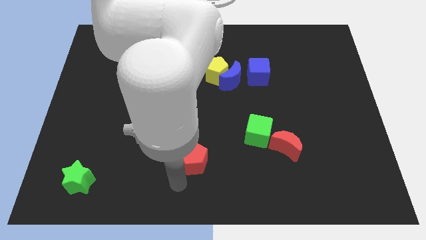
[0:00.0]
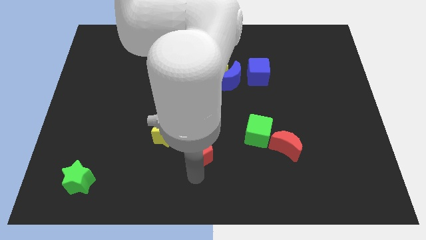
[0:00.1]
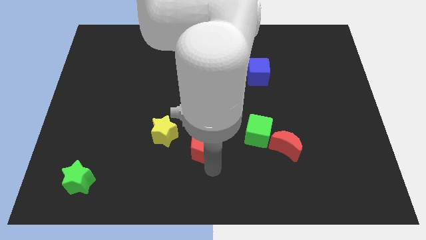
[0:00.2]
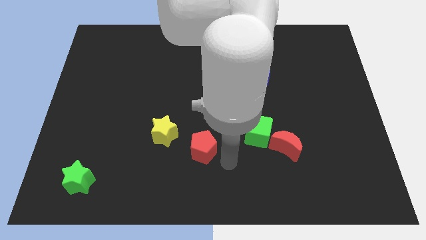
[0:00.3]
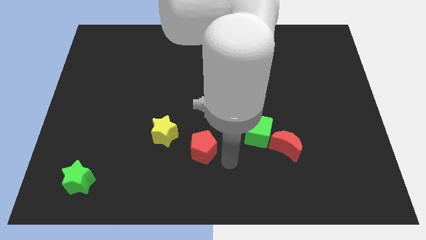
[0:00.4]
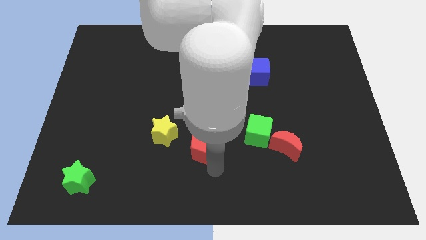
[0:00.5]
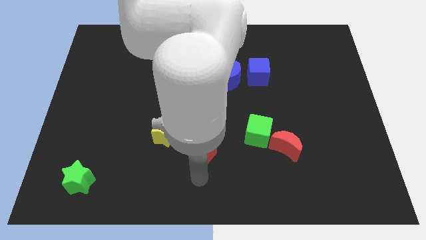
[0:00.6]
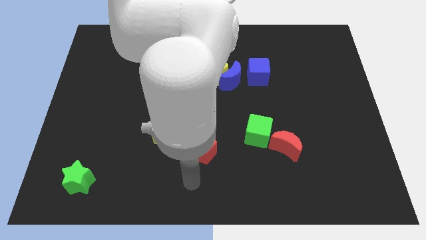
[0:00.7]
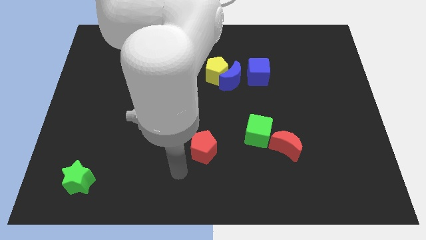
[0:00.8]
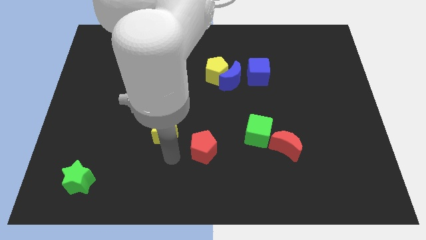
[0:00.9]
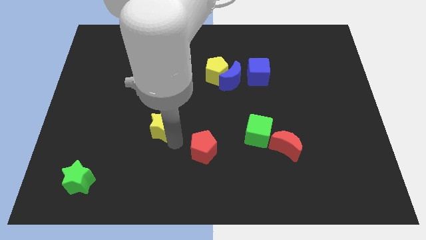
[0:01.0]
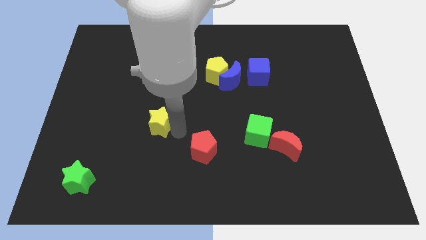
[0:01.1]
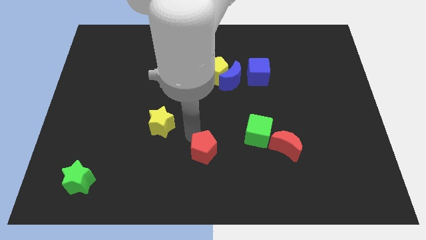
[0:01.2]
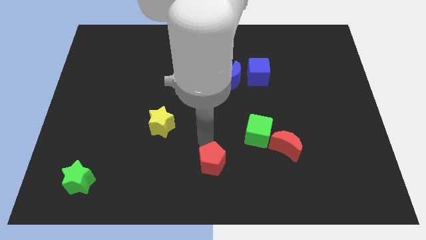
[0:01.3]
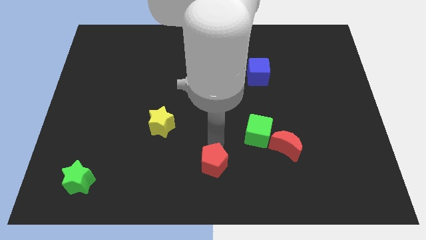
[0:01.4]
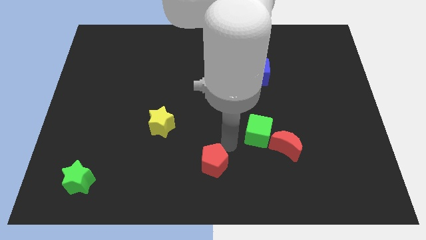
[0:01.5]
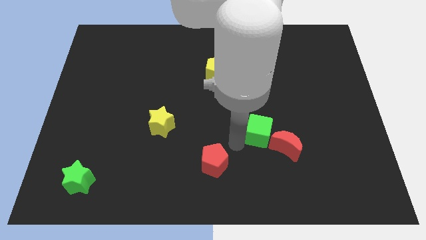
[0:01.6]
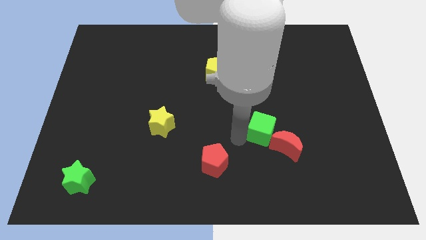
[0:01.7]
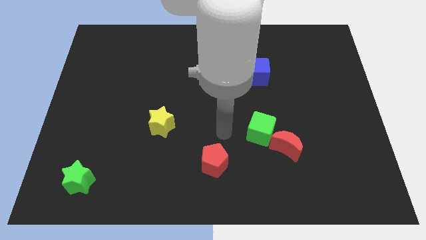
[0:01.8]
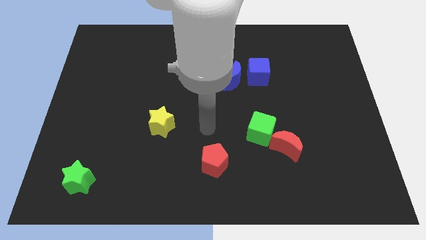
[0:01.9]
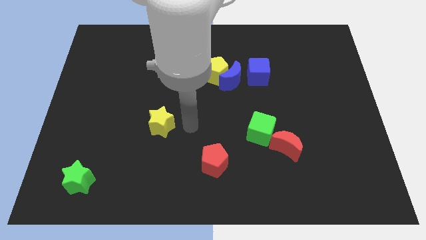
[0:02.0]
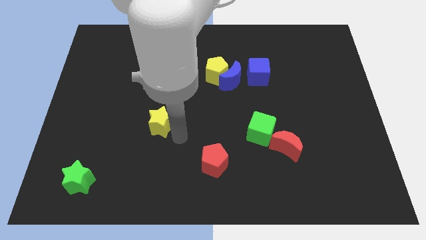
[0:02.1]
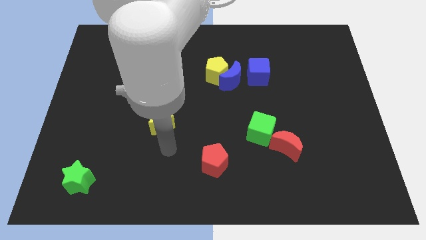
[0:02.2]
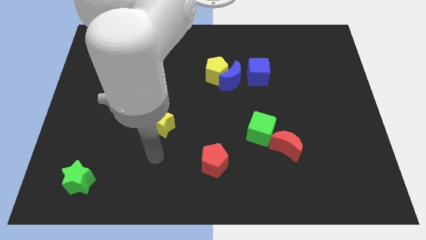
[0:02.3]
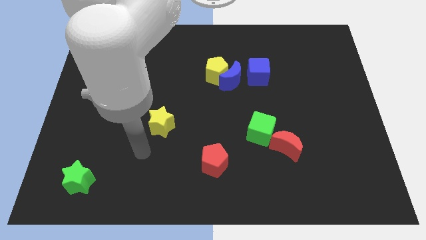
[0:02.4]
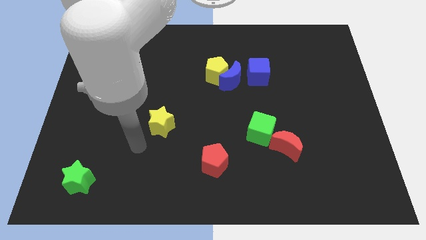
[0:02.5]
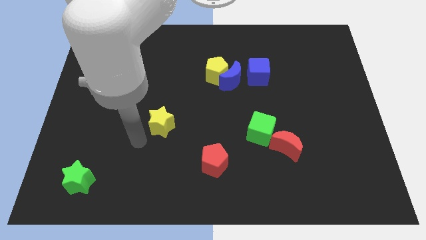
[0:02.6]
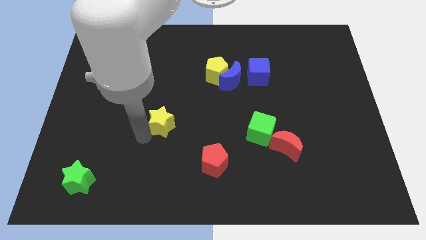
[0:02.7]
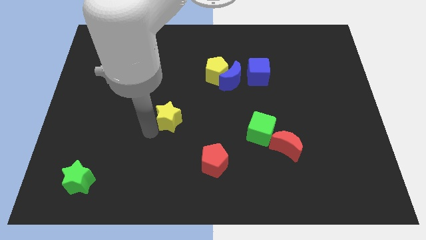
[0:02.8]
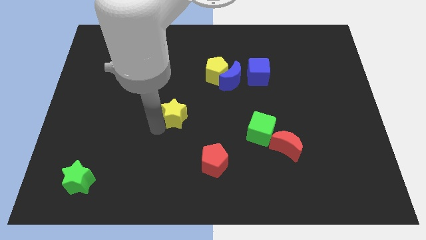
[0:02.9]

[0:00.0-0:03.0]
tap yellow star slightly

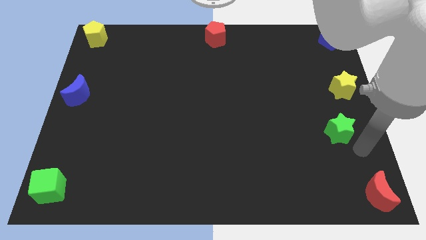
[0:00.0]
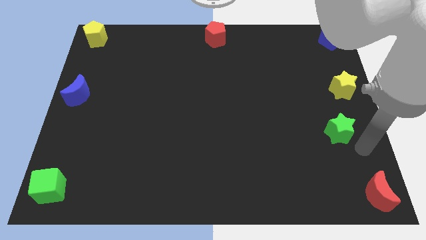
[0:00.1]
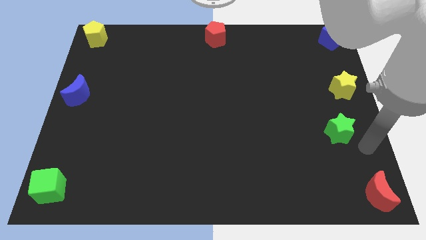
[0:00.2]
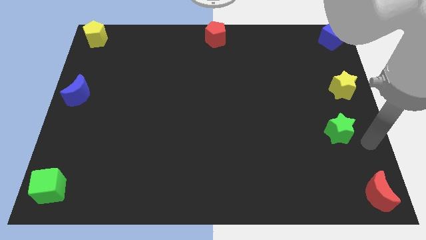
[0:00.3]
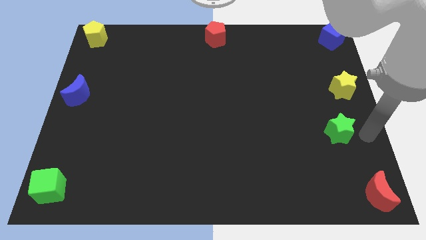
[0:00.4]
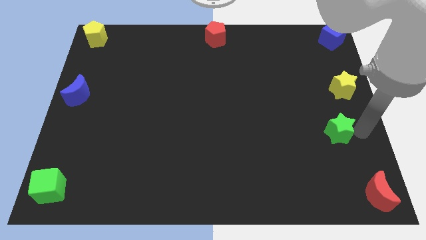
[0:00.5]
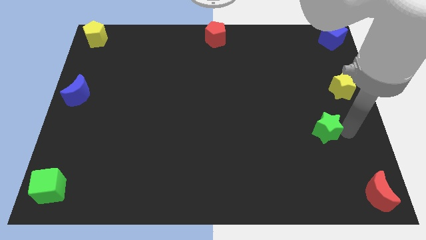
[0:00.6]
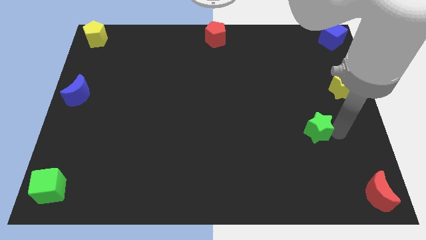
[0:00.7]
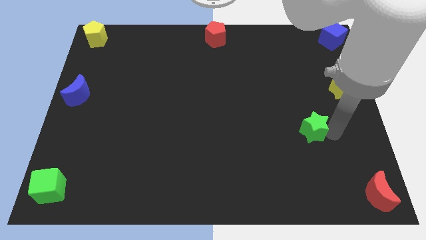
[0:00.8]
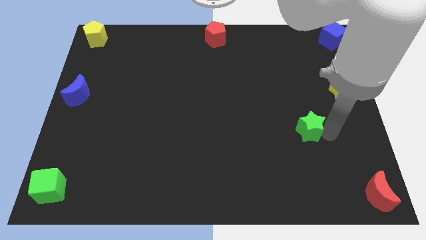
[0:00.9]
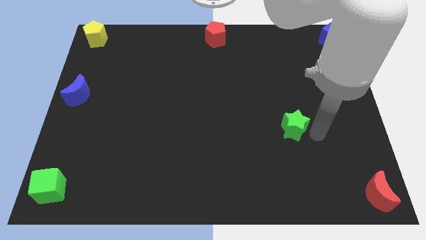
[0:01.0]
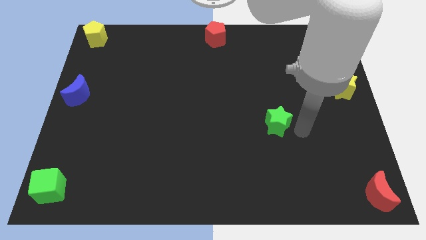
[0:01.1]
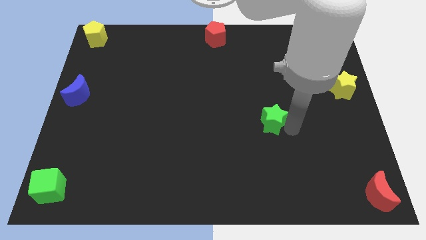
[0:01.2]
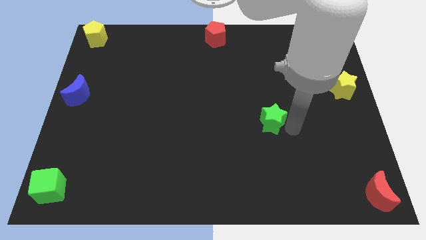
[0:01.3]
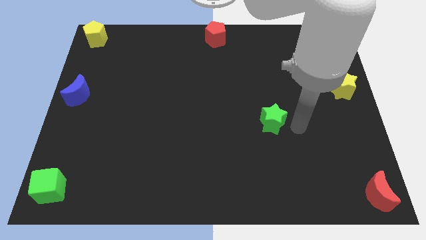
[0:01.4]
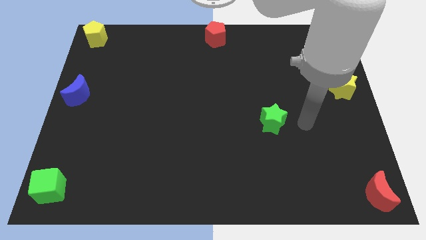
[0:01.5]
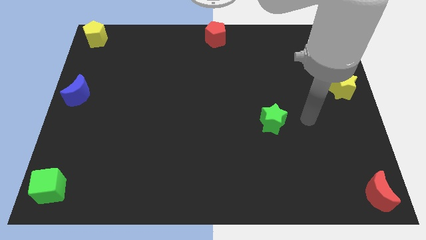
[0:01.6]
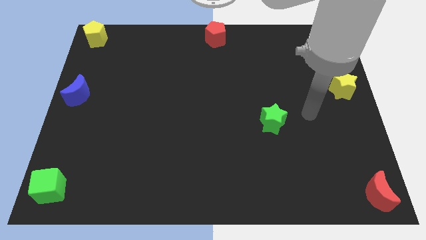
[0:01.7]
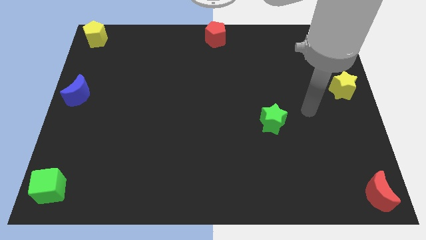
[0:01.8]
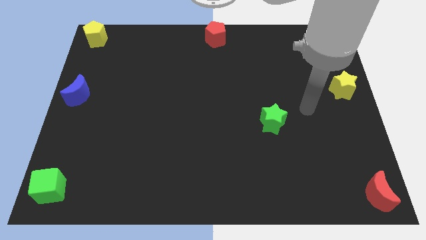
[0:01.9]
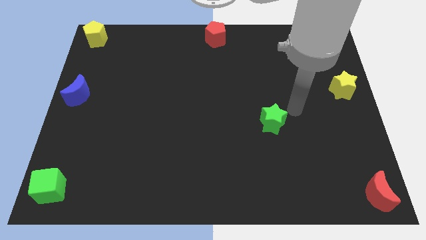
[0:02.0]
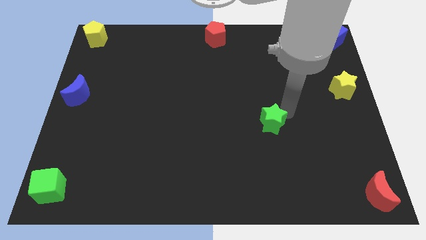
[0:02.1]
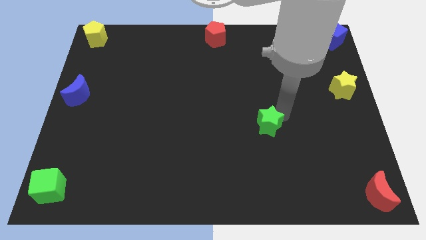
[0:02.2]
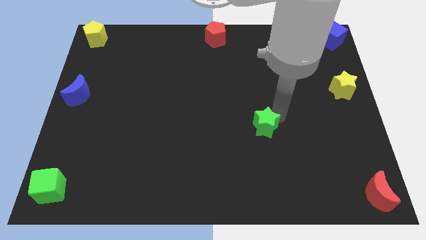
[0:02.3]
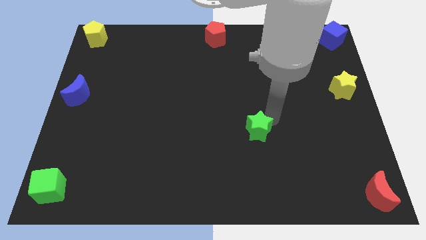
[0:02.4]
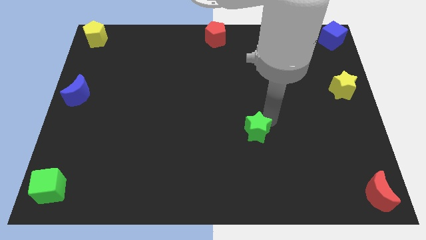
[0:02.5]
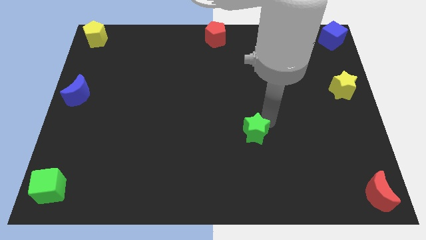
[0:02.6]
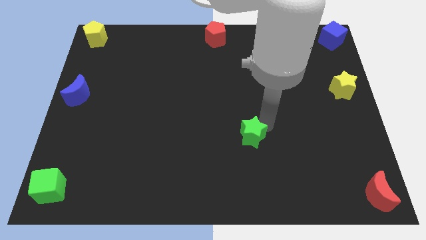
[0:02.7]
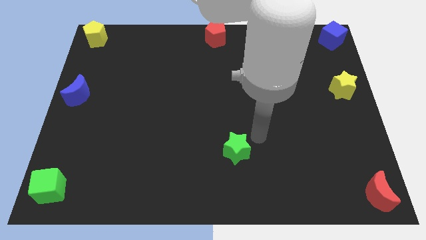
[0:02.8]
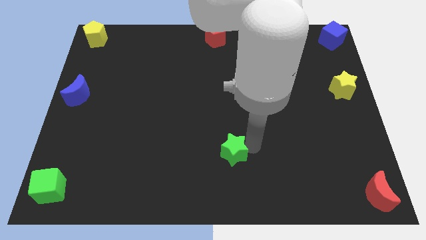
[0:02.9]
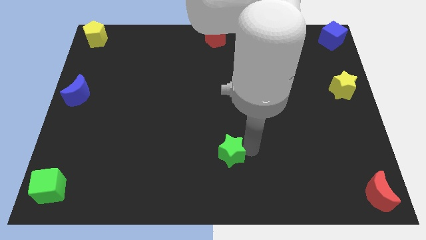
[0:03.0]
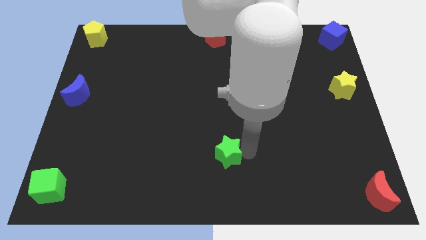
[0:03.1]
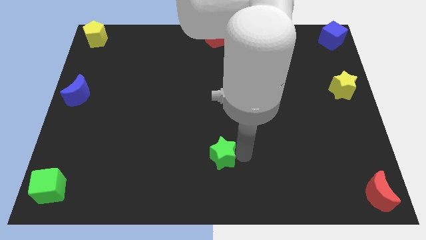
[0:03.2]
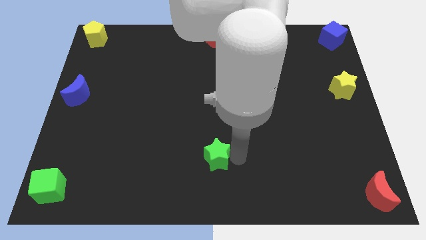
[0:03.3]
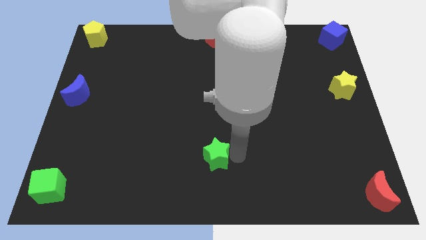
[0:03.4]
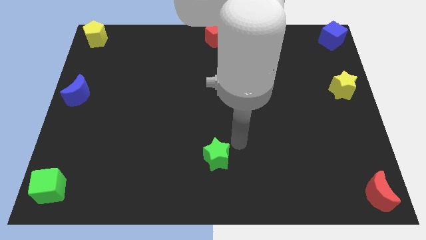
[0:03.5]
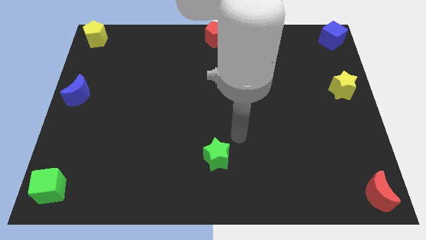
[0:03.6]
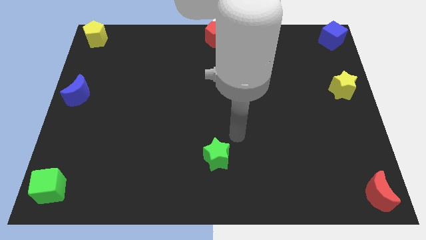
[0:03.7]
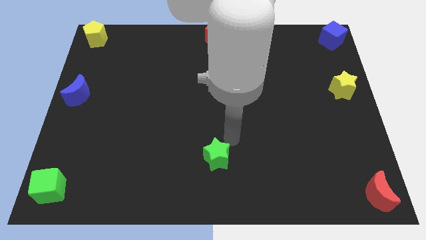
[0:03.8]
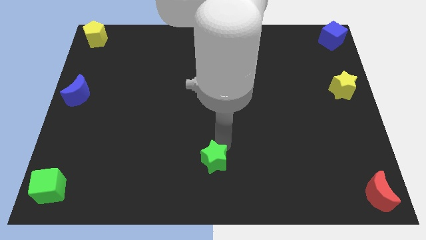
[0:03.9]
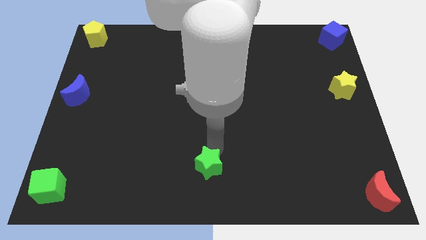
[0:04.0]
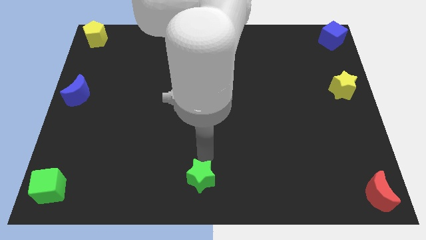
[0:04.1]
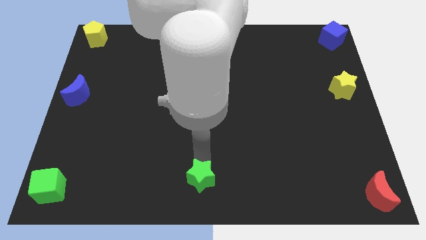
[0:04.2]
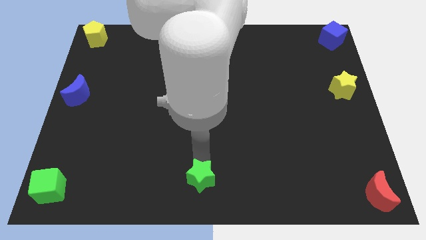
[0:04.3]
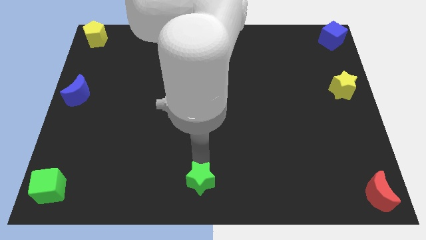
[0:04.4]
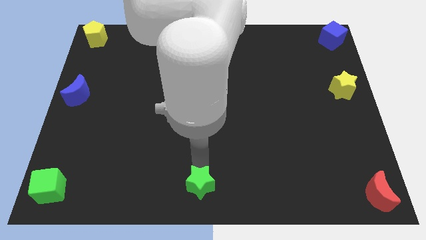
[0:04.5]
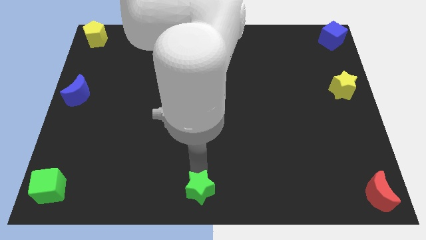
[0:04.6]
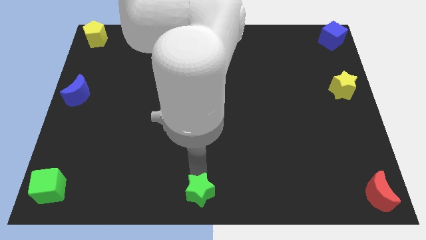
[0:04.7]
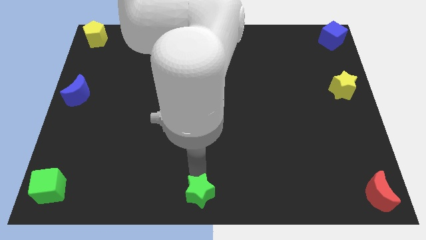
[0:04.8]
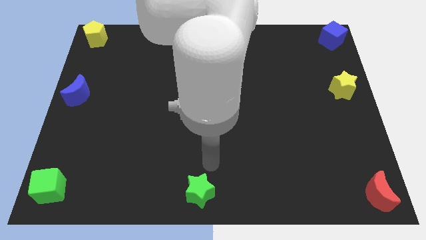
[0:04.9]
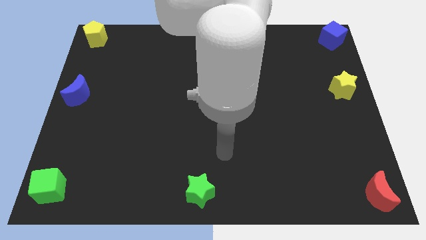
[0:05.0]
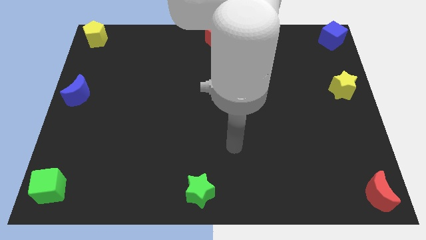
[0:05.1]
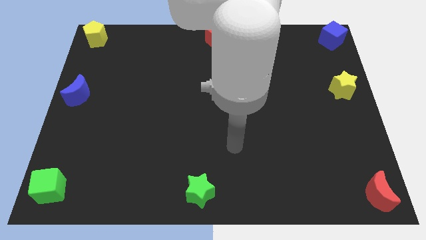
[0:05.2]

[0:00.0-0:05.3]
place the green star at the bottom center of the board

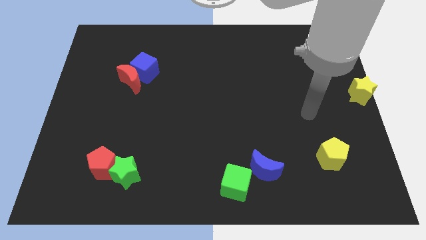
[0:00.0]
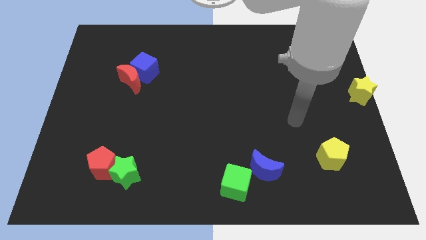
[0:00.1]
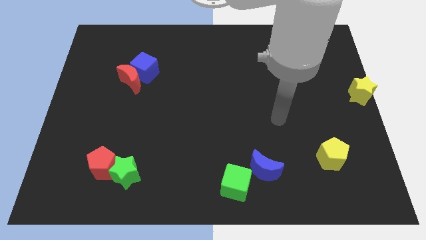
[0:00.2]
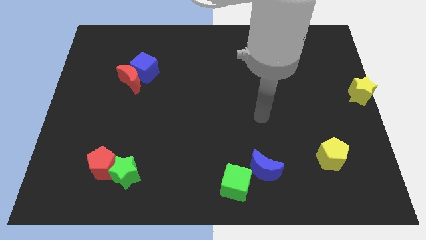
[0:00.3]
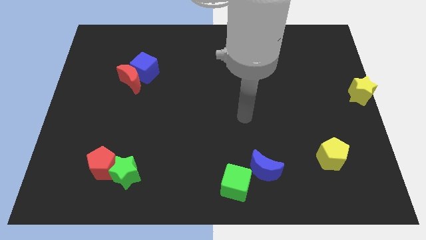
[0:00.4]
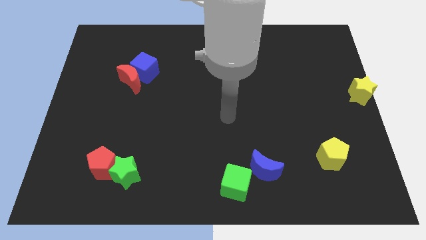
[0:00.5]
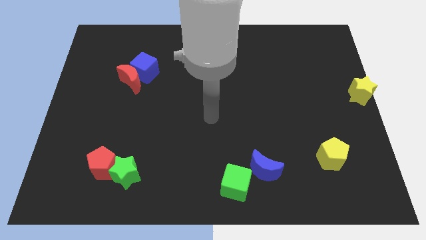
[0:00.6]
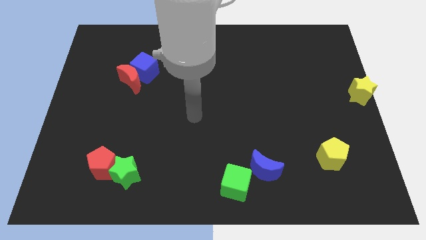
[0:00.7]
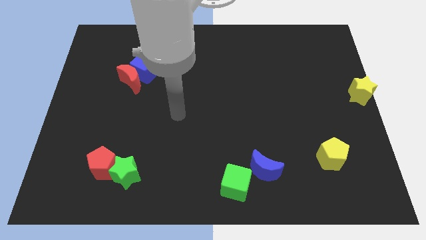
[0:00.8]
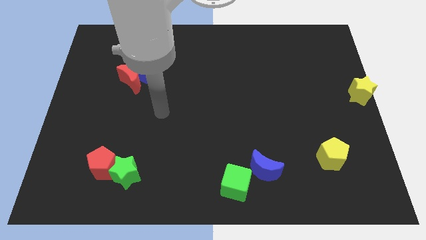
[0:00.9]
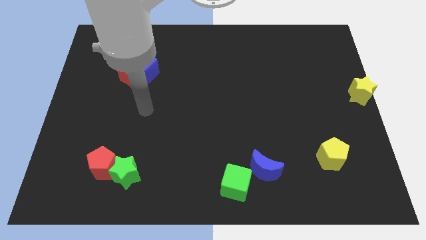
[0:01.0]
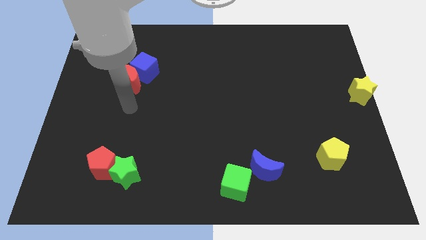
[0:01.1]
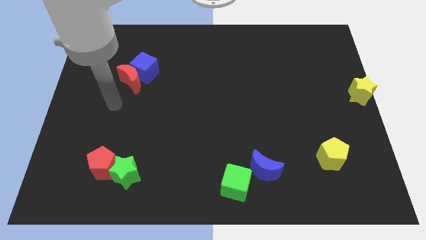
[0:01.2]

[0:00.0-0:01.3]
push the arm towards the left side of the board
